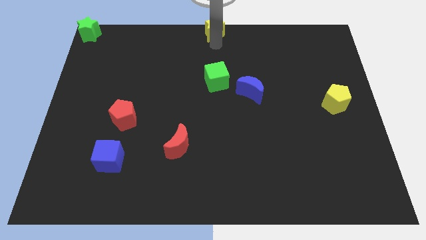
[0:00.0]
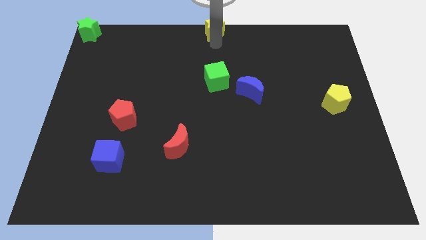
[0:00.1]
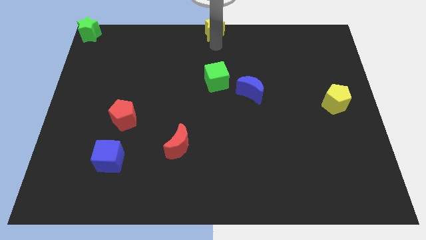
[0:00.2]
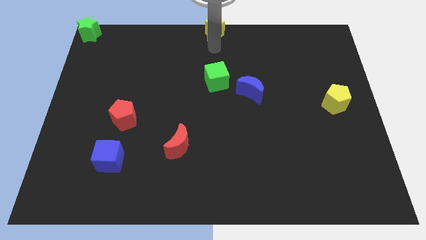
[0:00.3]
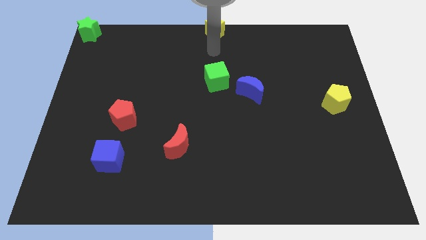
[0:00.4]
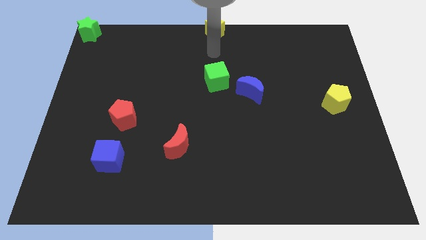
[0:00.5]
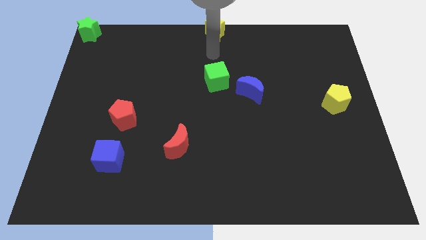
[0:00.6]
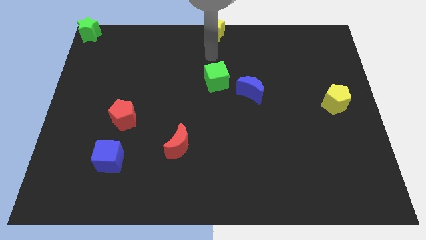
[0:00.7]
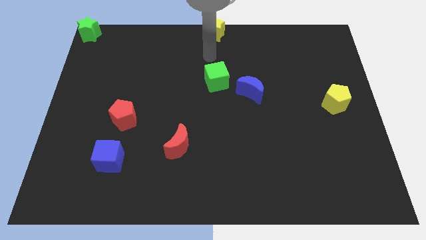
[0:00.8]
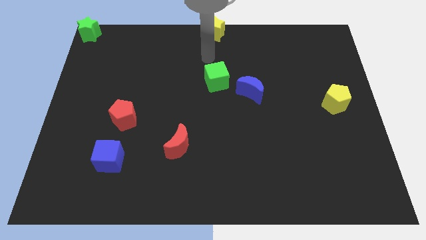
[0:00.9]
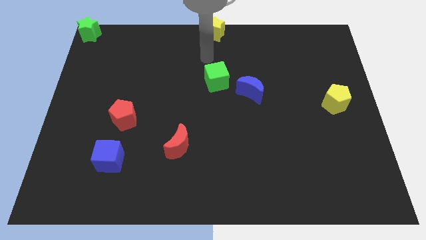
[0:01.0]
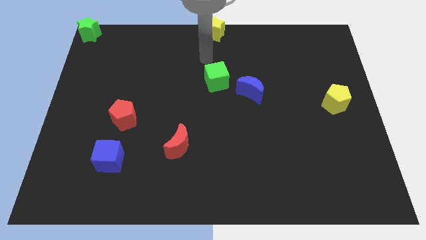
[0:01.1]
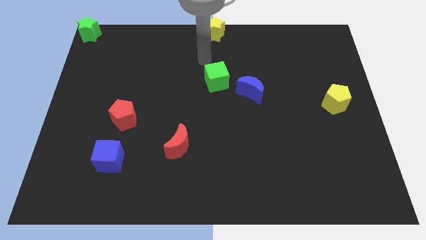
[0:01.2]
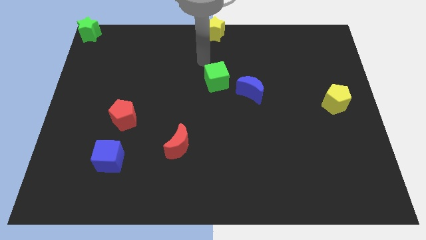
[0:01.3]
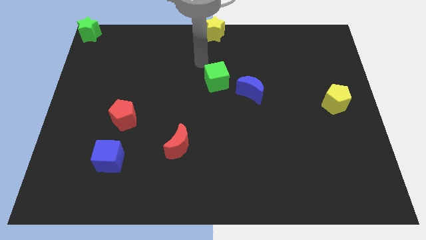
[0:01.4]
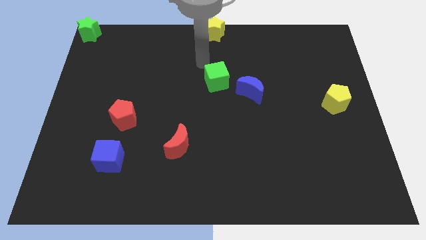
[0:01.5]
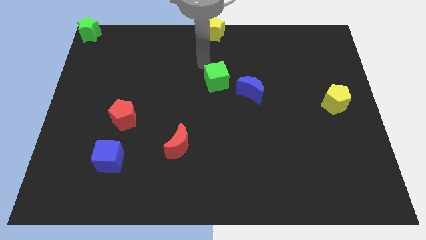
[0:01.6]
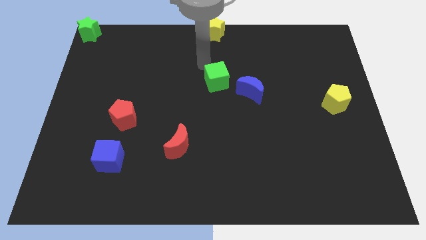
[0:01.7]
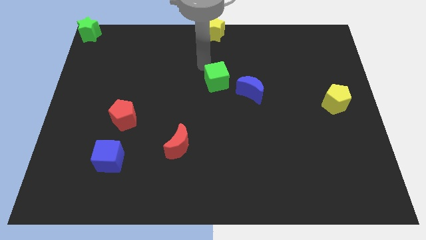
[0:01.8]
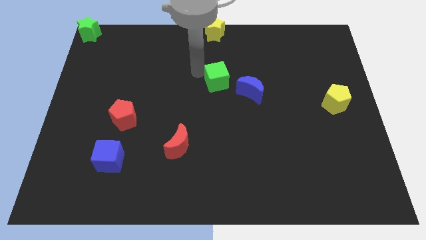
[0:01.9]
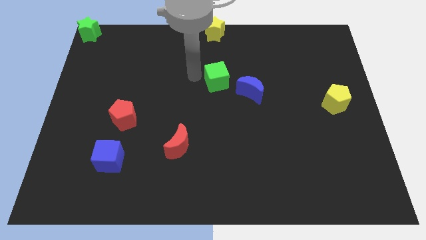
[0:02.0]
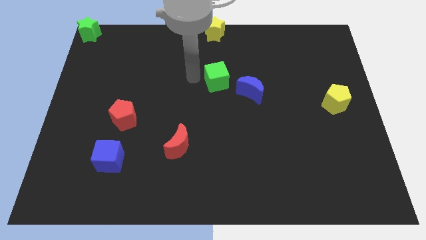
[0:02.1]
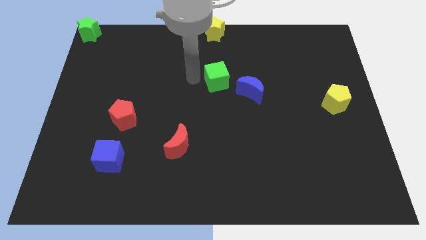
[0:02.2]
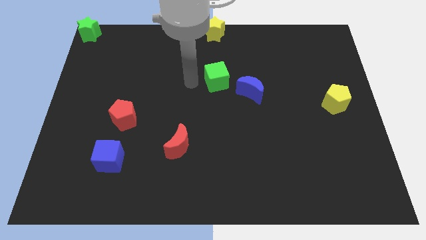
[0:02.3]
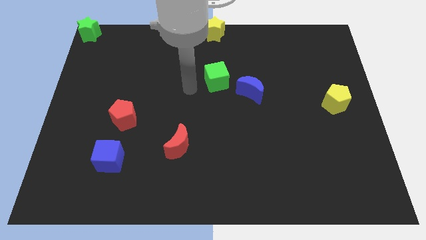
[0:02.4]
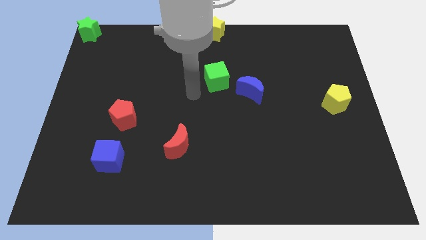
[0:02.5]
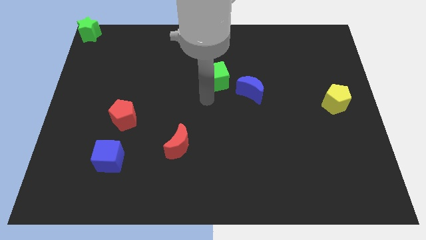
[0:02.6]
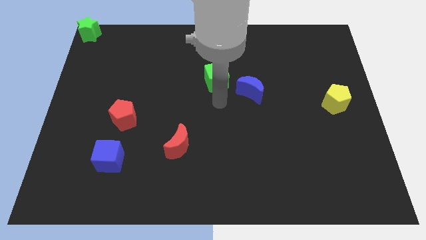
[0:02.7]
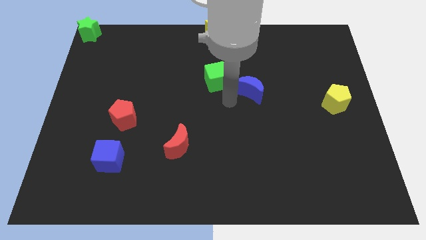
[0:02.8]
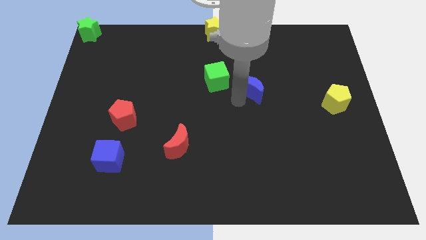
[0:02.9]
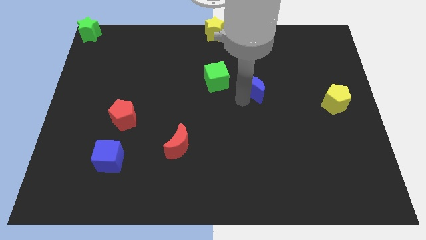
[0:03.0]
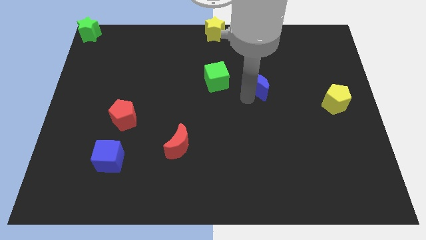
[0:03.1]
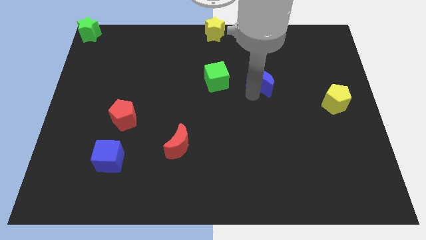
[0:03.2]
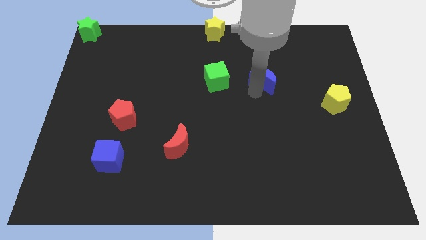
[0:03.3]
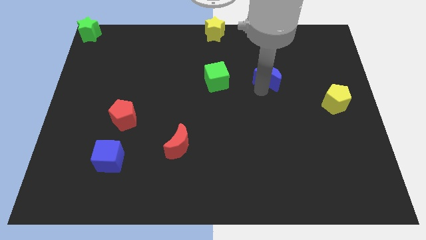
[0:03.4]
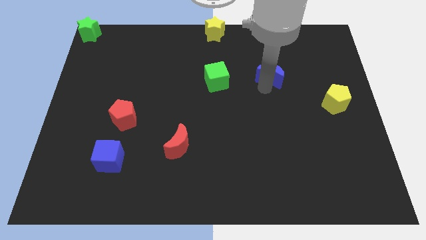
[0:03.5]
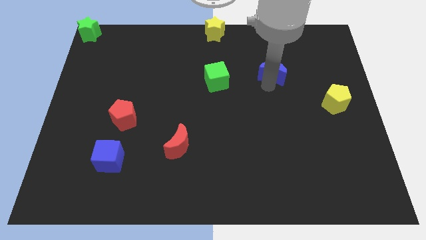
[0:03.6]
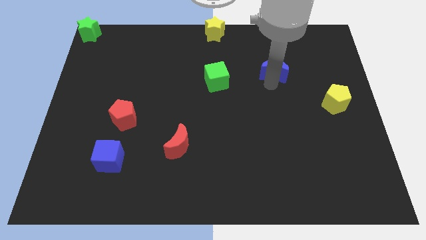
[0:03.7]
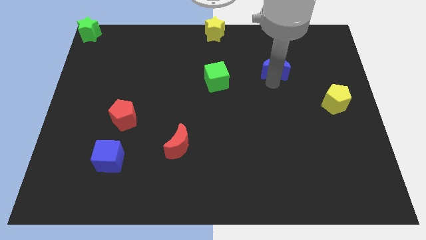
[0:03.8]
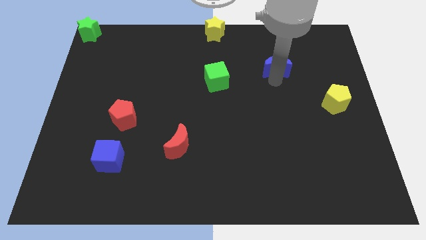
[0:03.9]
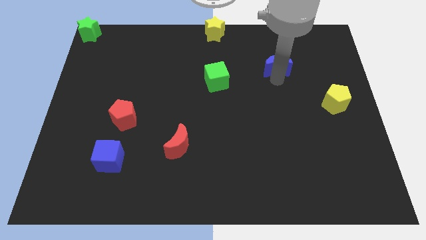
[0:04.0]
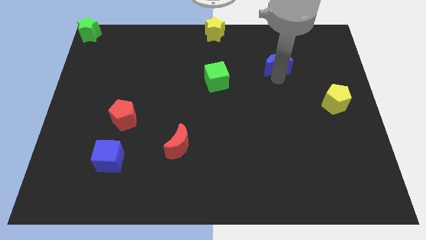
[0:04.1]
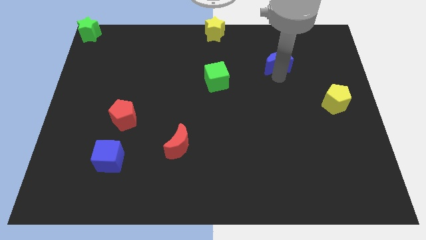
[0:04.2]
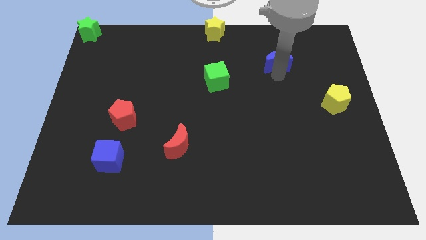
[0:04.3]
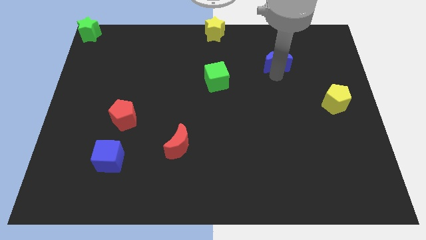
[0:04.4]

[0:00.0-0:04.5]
move blue crescent towards top

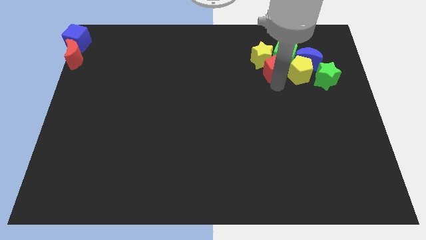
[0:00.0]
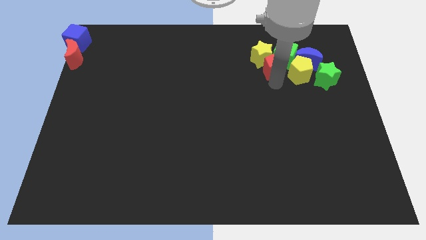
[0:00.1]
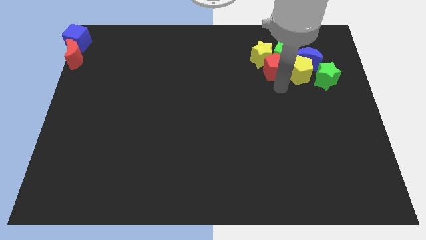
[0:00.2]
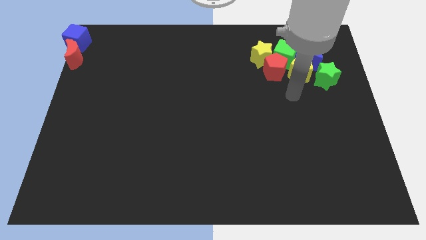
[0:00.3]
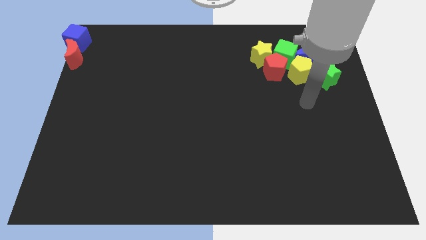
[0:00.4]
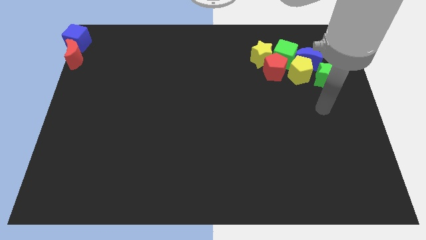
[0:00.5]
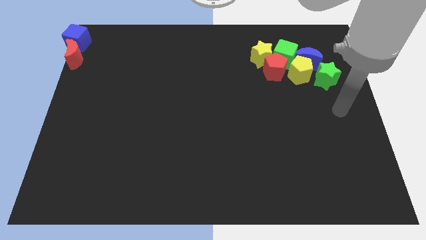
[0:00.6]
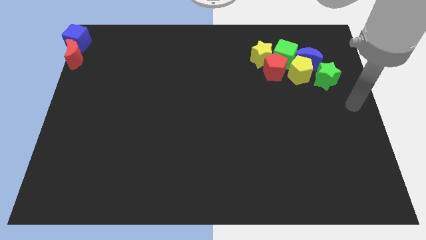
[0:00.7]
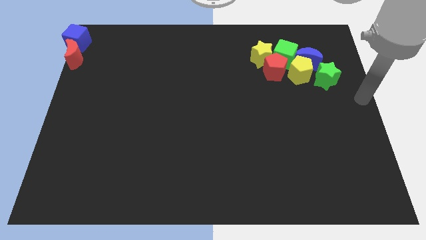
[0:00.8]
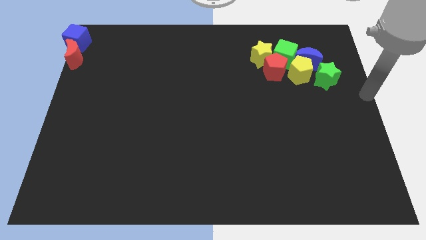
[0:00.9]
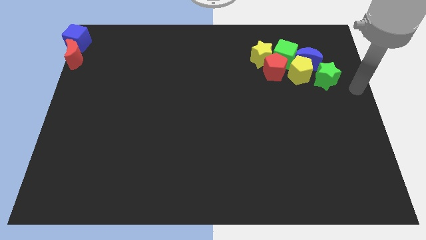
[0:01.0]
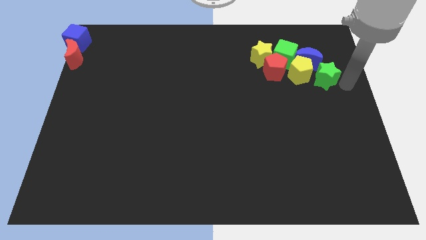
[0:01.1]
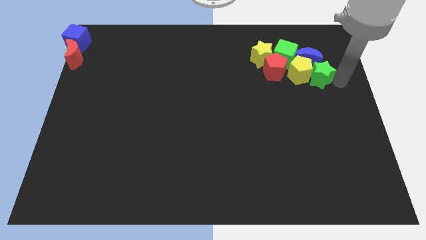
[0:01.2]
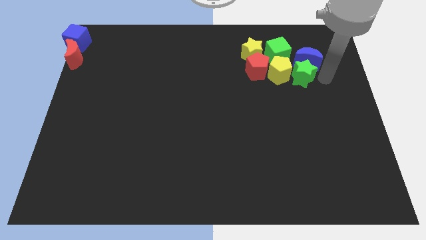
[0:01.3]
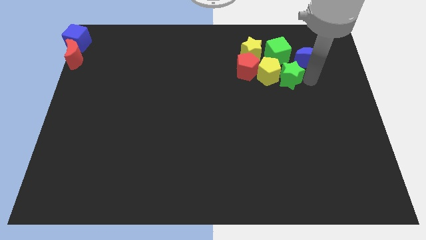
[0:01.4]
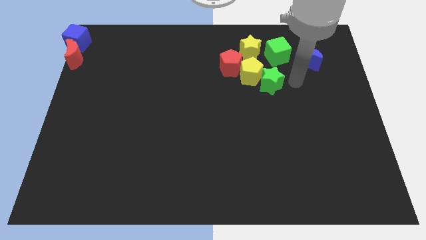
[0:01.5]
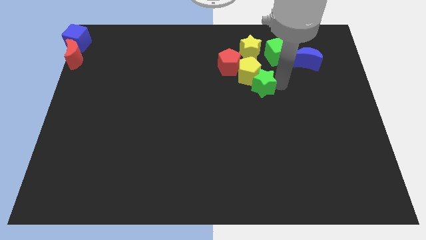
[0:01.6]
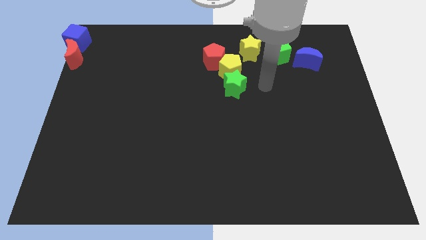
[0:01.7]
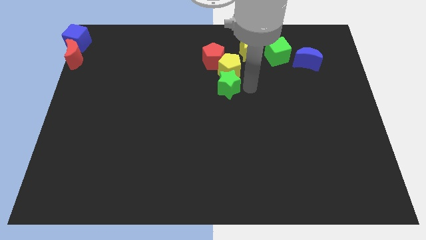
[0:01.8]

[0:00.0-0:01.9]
push the green star into the yellow pentagon

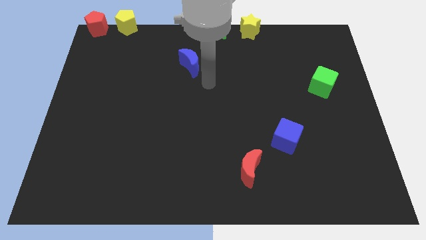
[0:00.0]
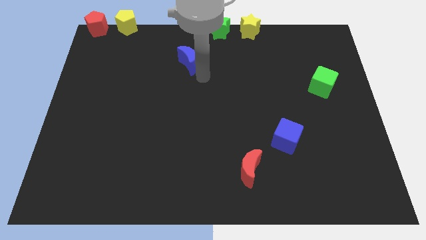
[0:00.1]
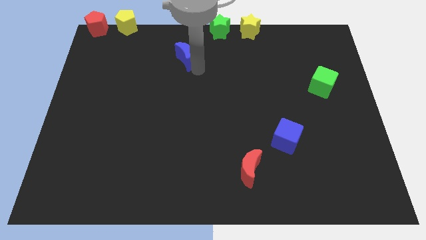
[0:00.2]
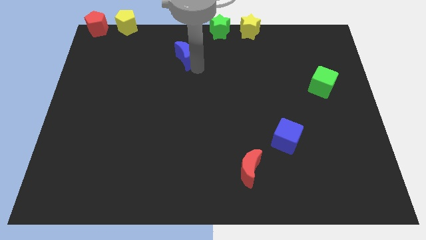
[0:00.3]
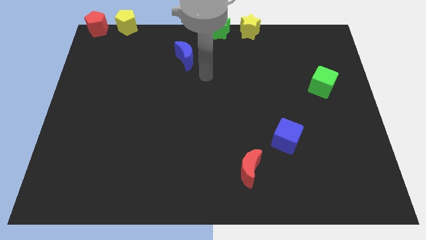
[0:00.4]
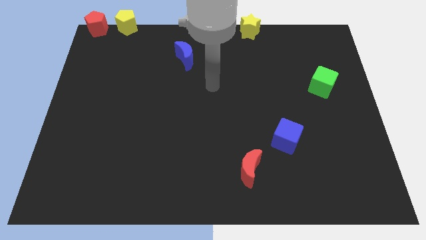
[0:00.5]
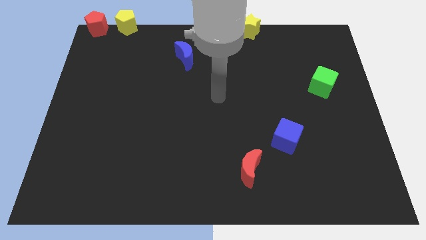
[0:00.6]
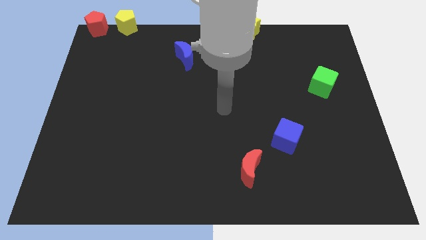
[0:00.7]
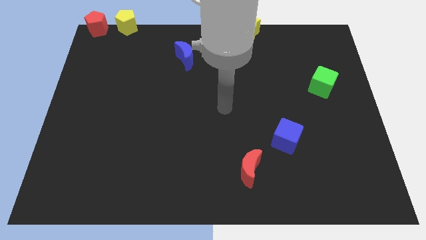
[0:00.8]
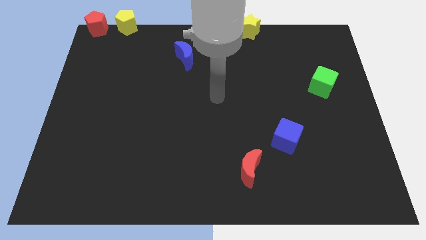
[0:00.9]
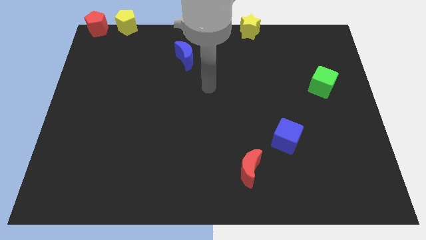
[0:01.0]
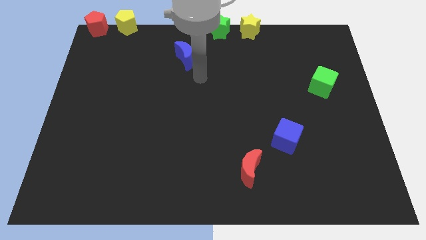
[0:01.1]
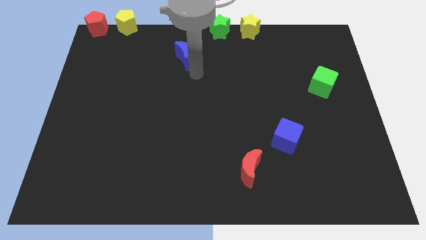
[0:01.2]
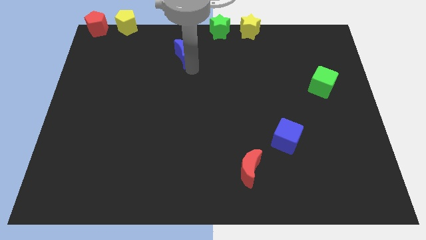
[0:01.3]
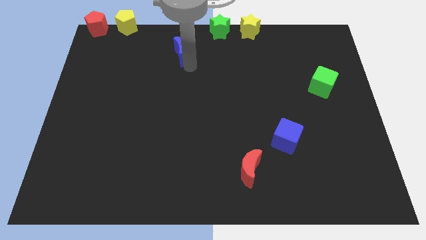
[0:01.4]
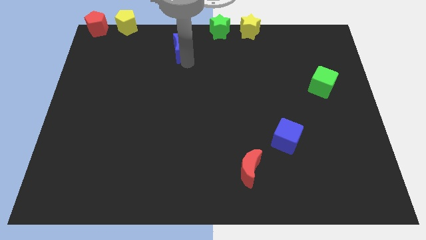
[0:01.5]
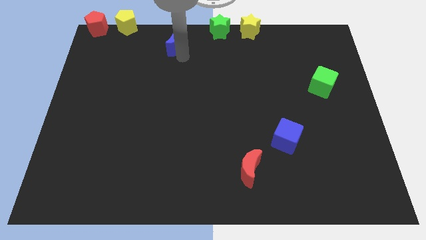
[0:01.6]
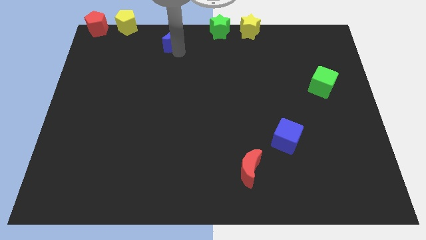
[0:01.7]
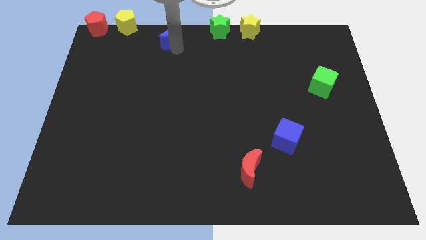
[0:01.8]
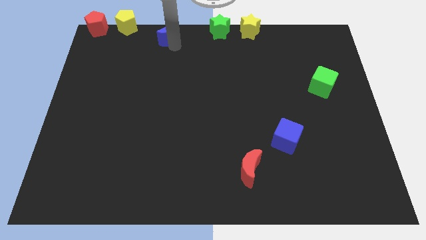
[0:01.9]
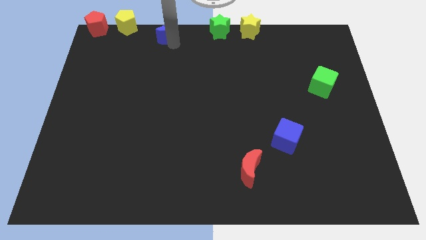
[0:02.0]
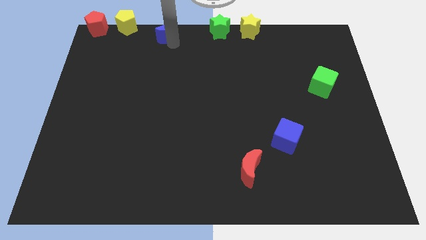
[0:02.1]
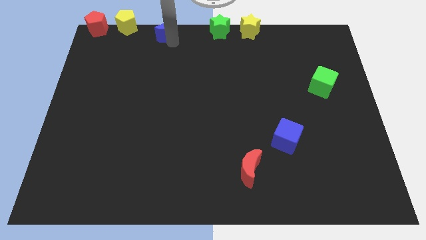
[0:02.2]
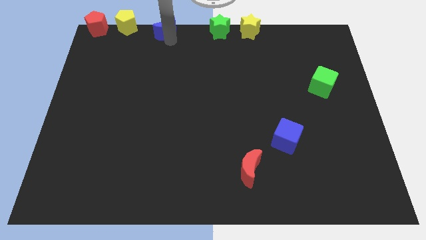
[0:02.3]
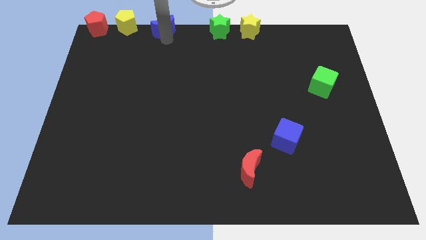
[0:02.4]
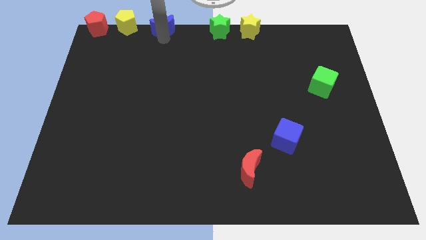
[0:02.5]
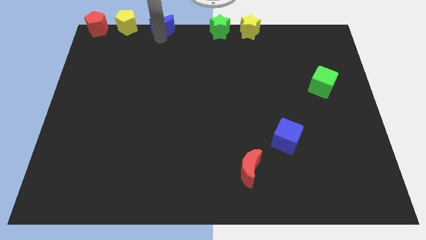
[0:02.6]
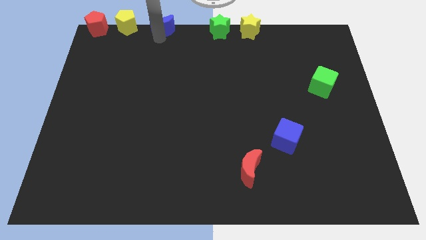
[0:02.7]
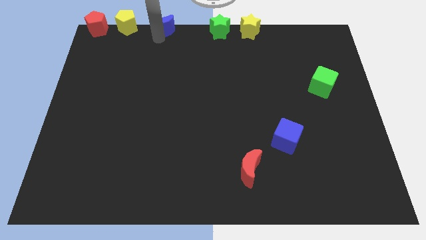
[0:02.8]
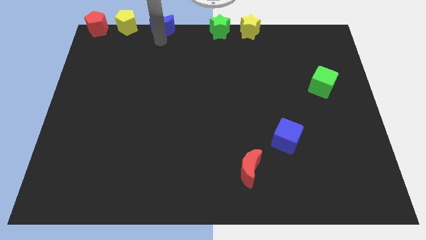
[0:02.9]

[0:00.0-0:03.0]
place the blue crescent to the right of yellow pentagon
